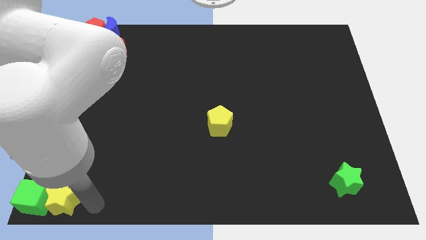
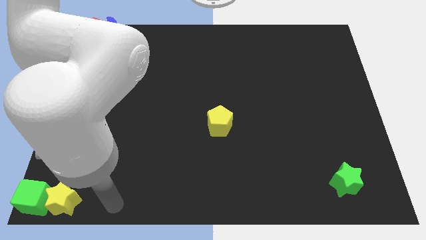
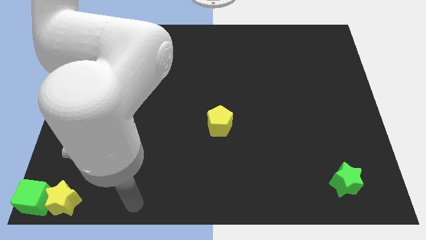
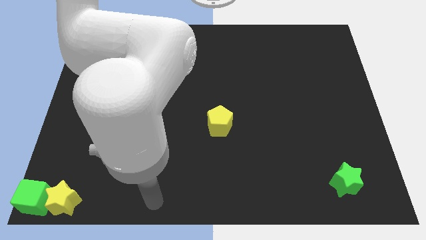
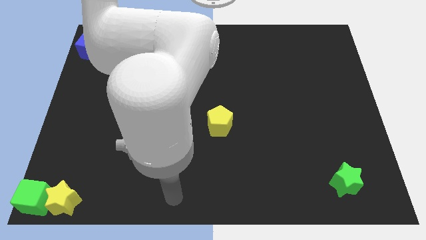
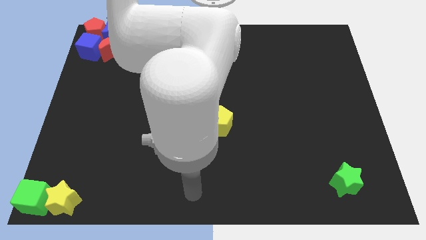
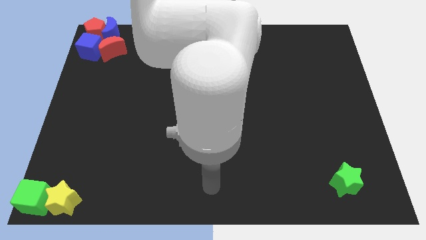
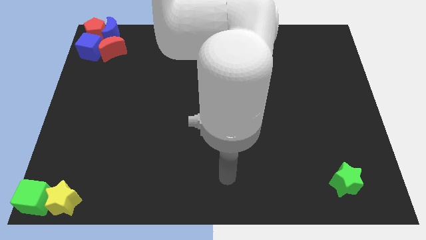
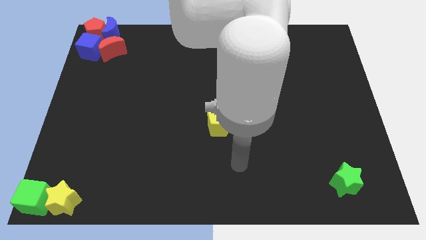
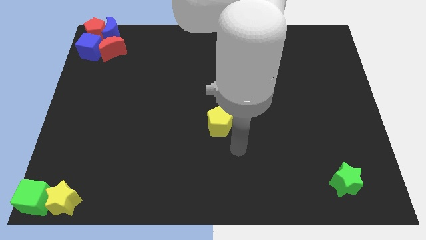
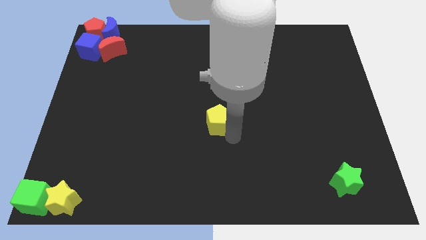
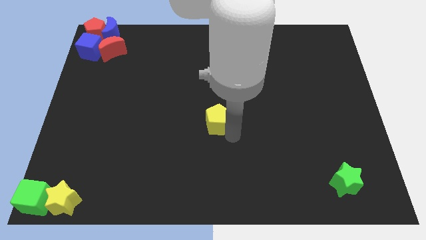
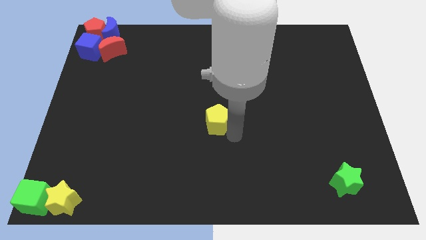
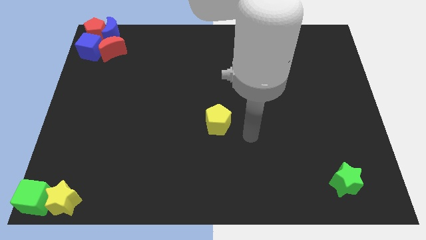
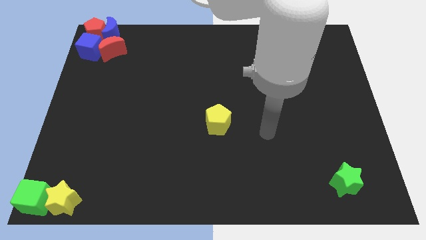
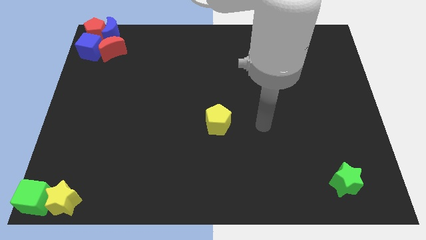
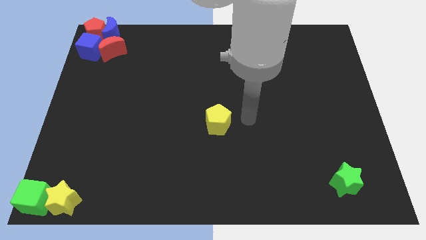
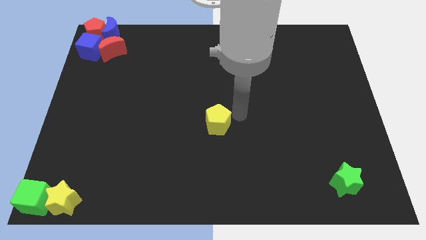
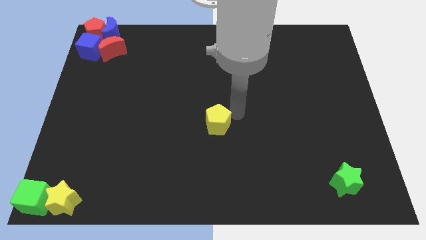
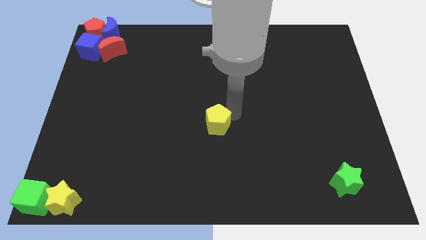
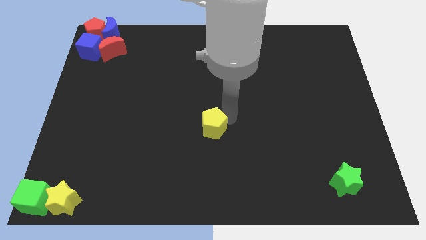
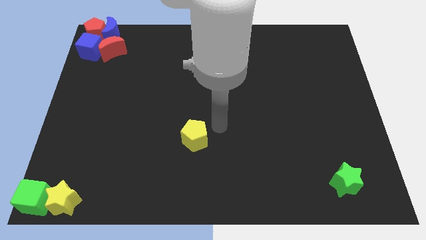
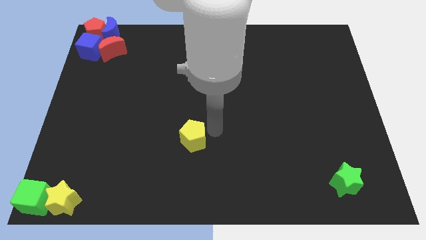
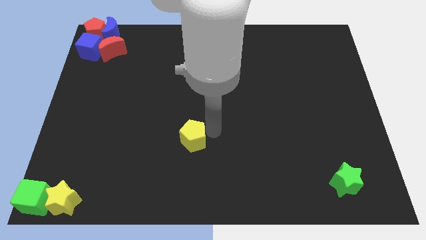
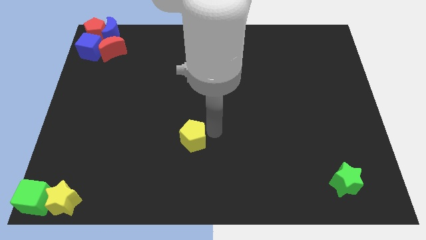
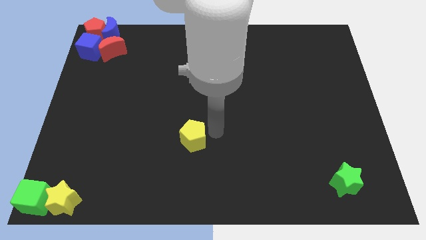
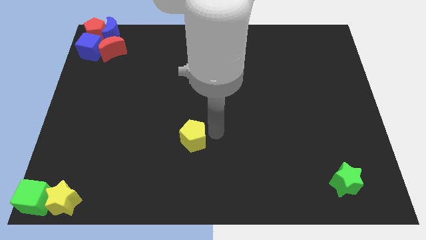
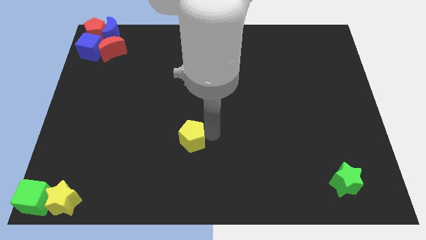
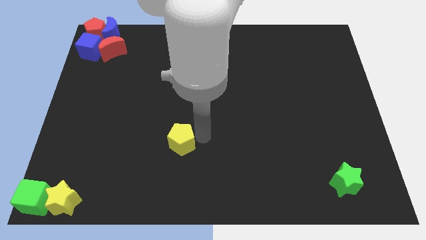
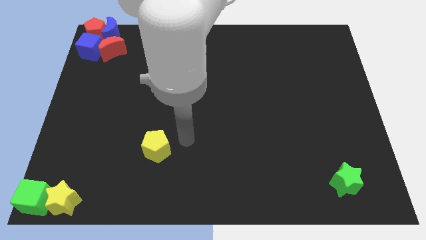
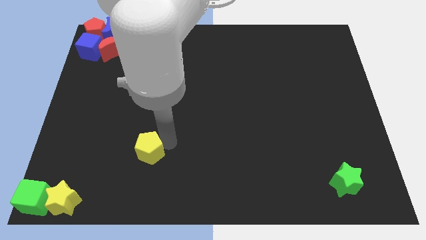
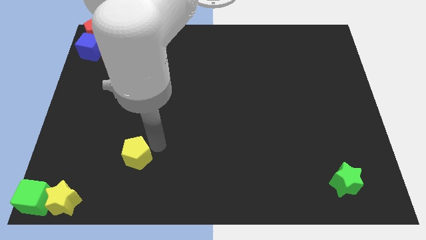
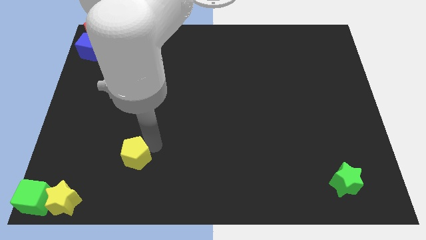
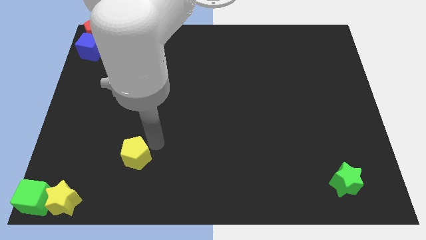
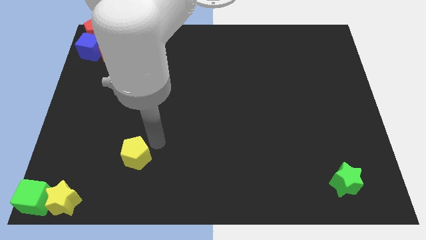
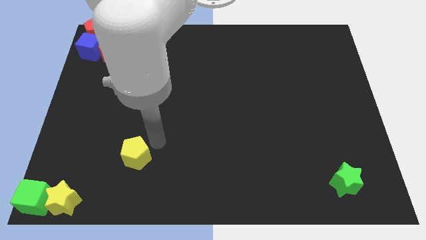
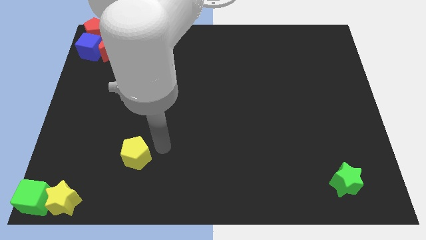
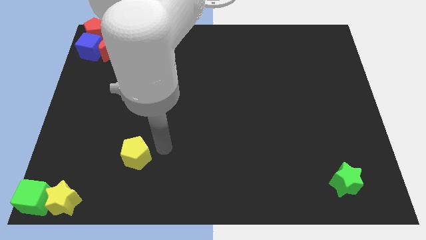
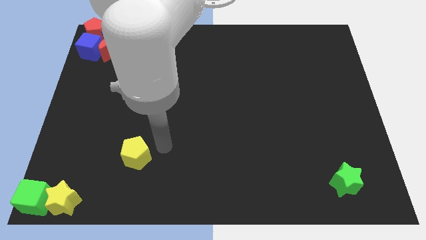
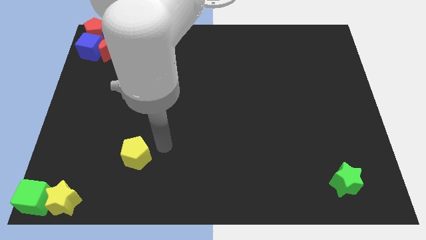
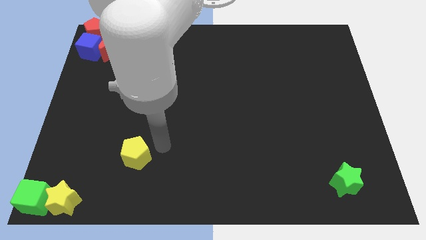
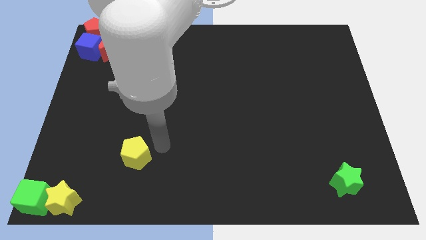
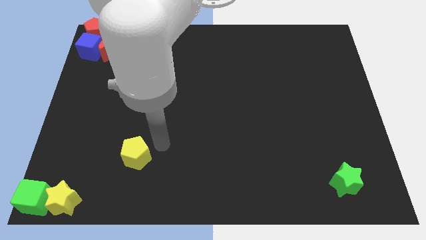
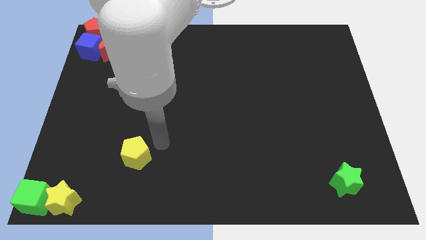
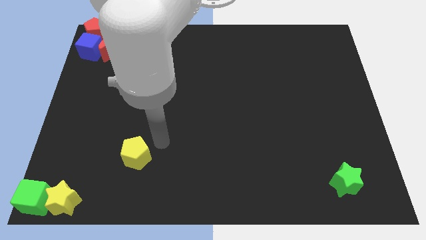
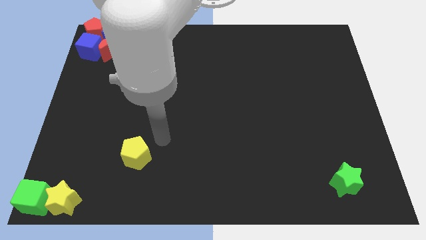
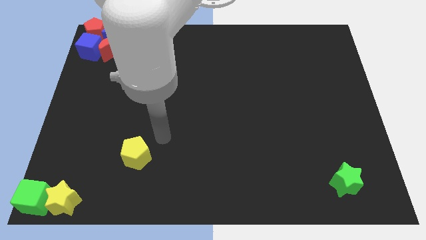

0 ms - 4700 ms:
put the yellow pentagon diagonally above the top right side of the yellow star

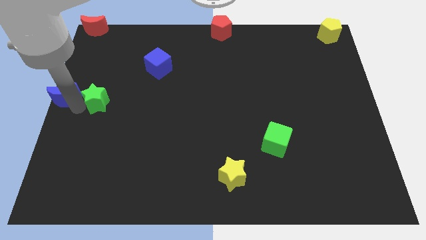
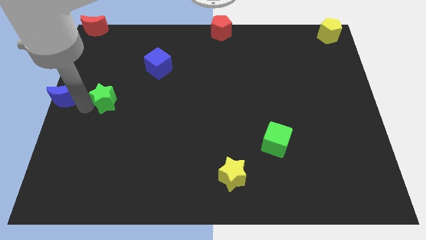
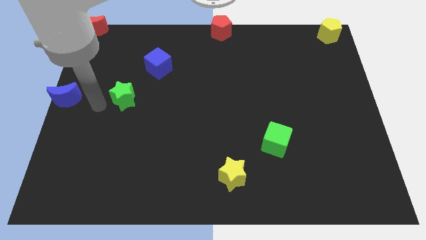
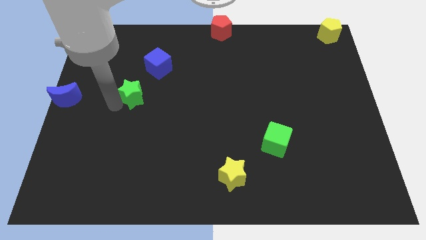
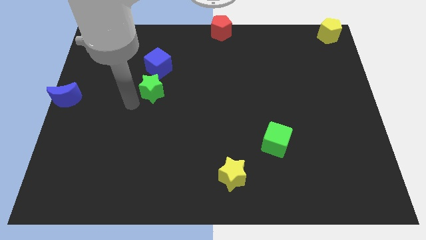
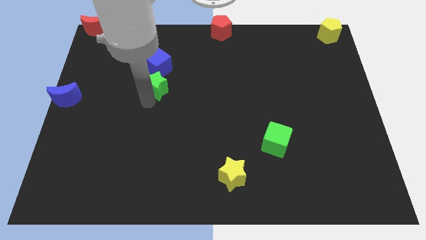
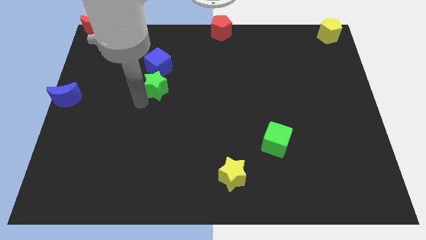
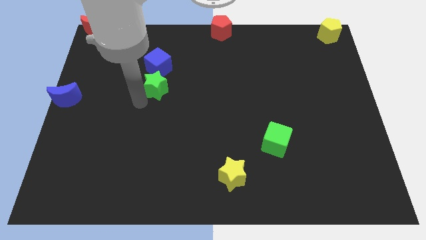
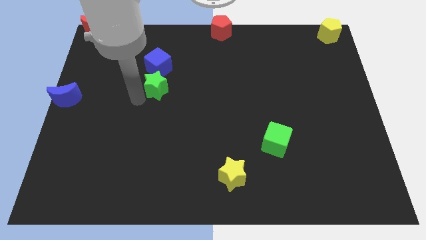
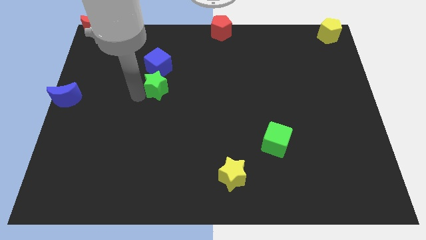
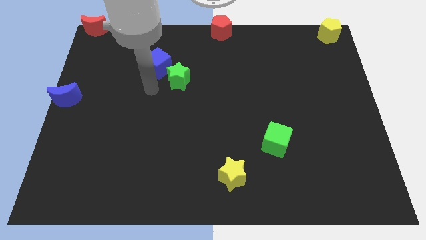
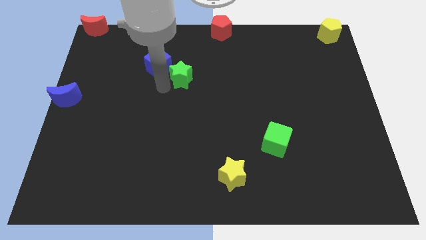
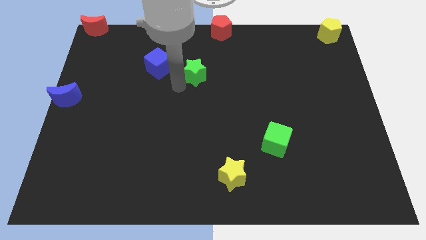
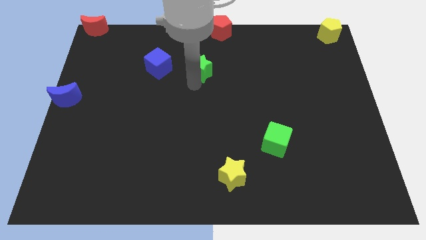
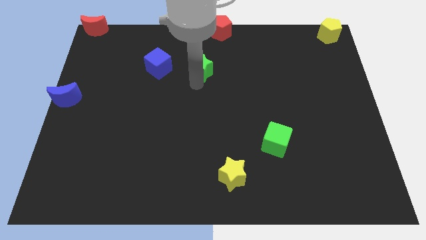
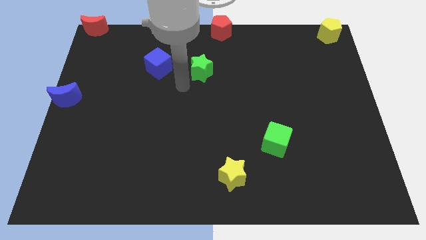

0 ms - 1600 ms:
move the green star right to the blue cube

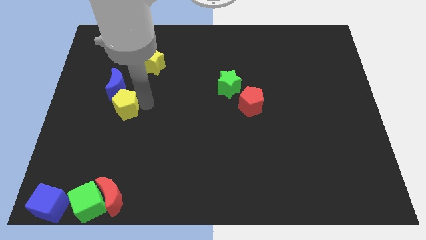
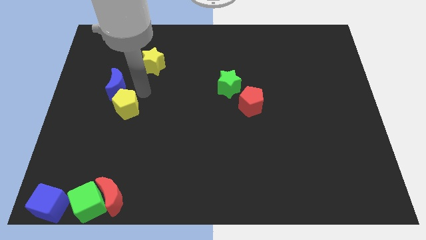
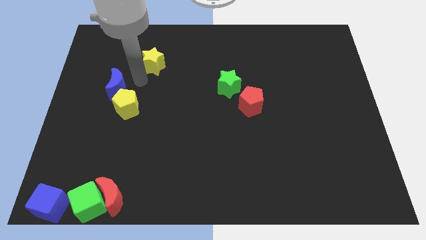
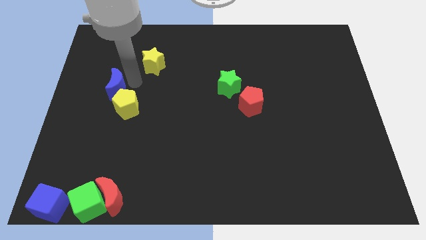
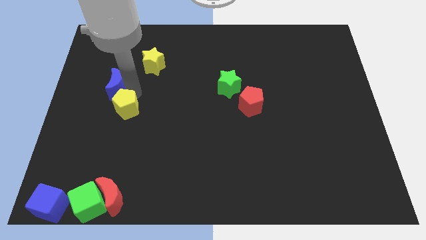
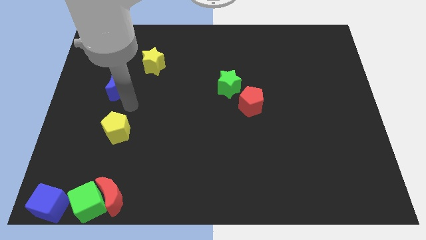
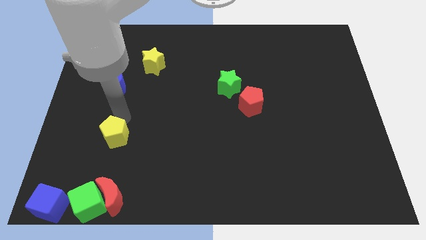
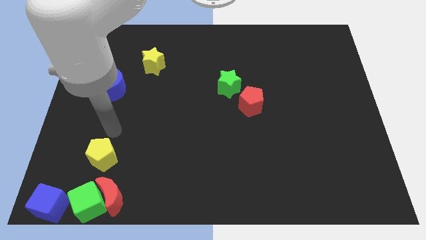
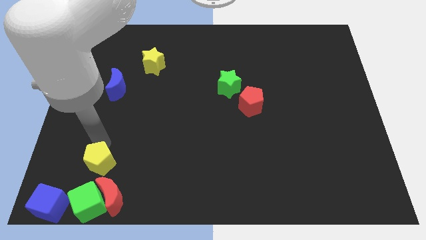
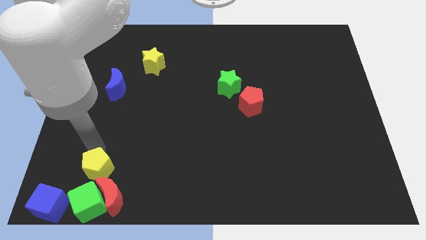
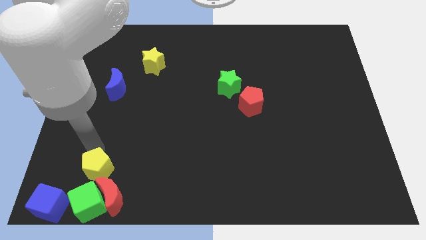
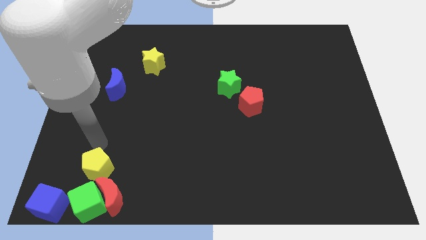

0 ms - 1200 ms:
separate yellow pentagon from the blue cube

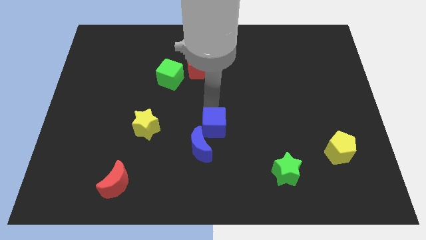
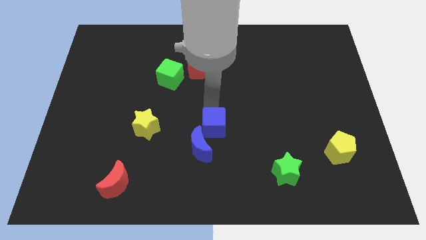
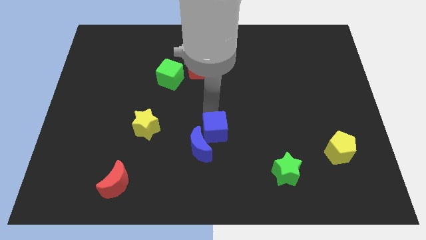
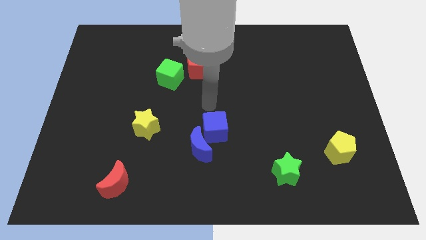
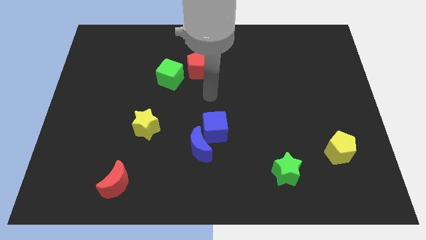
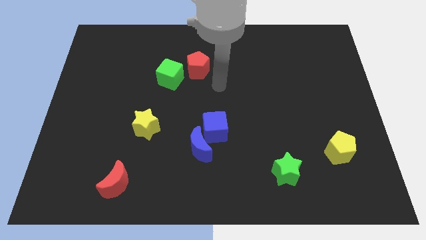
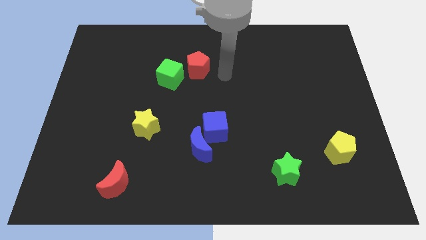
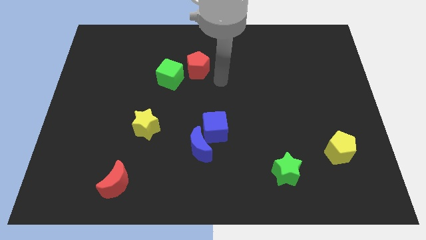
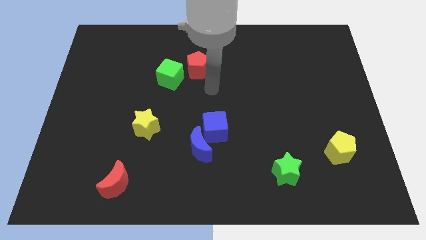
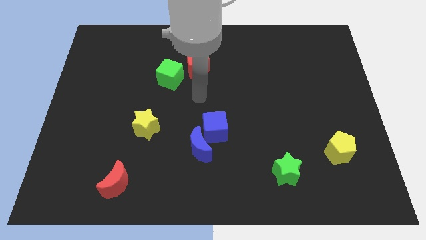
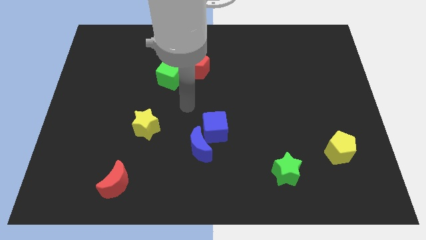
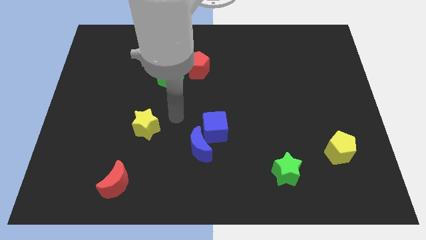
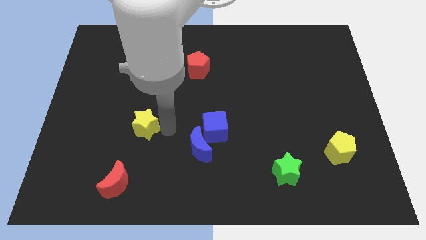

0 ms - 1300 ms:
move your arm to the right side of the yellow star
